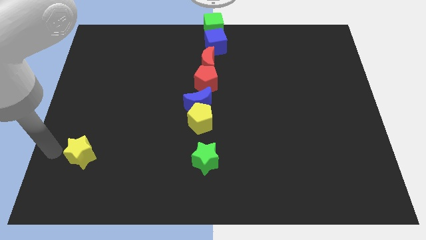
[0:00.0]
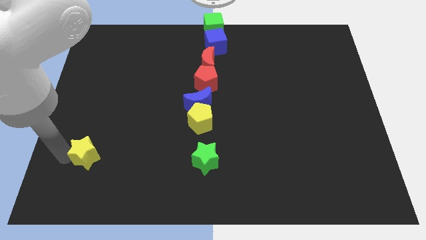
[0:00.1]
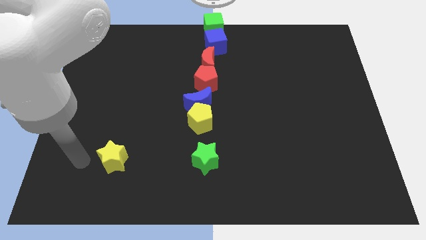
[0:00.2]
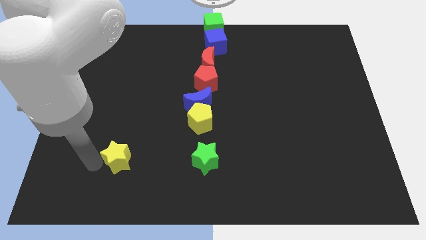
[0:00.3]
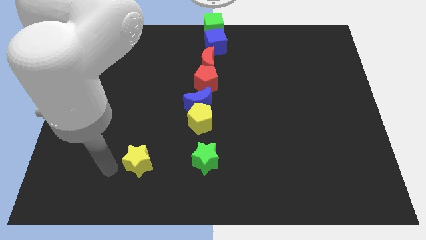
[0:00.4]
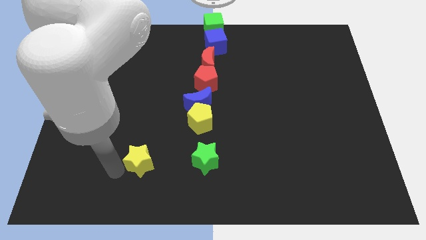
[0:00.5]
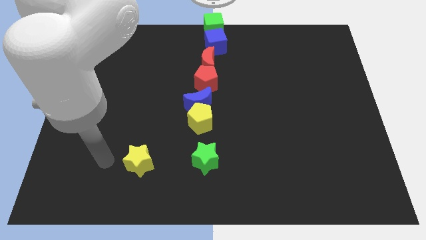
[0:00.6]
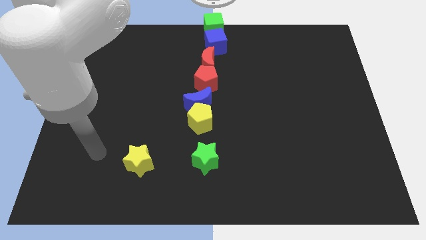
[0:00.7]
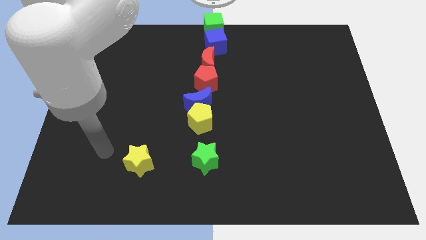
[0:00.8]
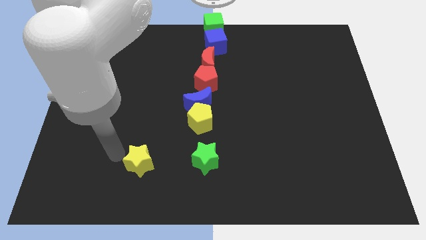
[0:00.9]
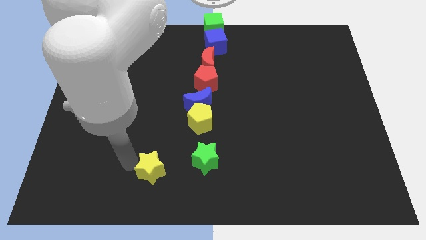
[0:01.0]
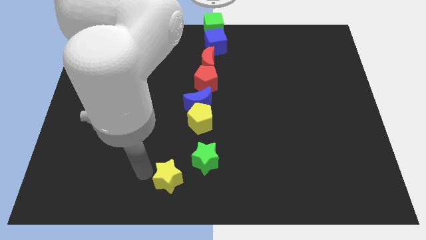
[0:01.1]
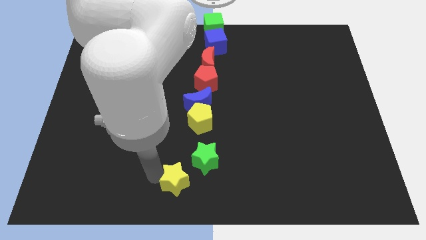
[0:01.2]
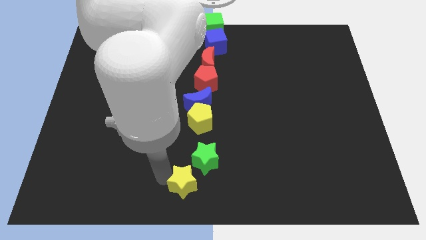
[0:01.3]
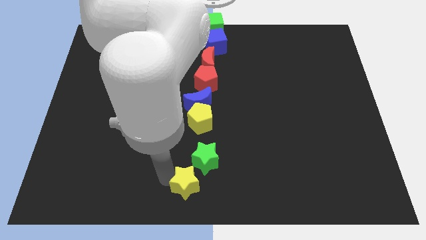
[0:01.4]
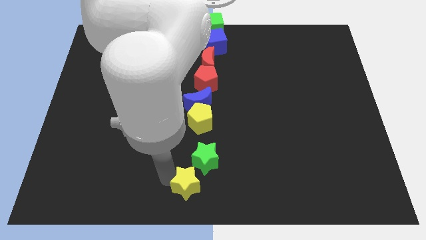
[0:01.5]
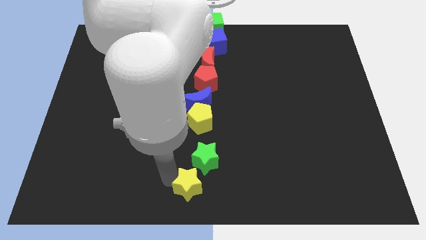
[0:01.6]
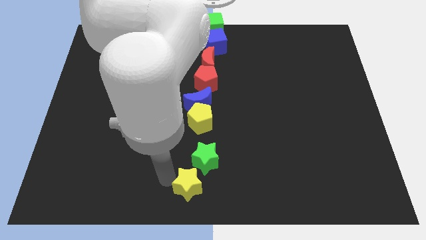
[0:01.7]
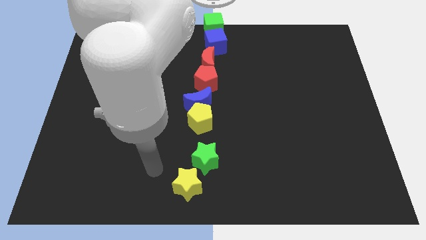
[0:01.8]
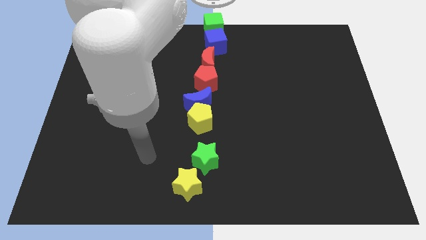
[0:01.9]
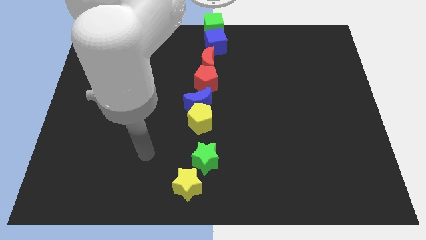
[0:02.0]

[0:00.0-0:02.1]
place the yellow star at the bottom of the green star

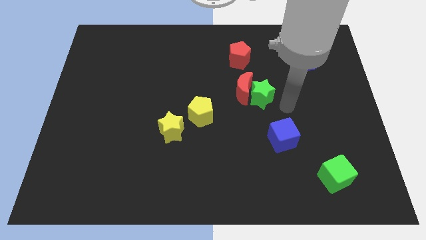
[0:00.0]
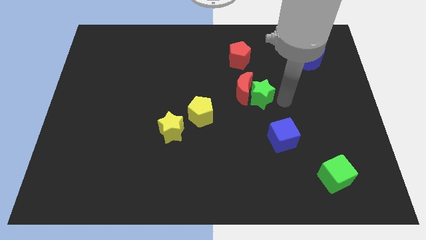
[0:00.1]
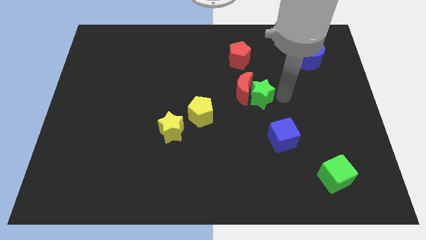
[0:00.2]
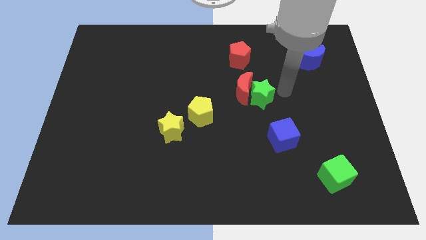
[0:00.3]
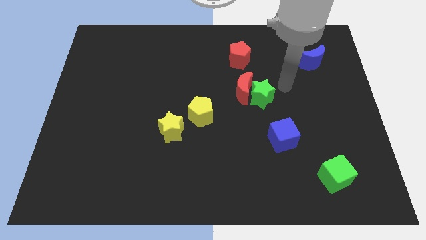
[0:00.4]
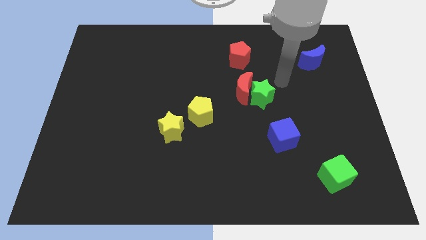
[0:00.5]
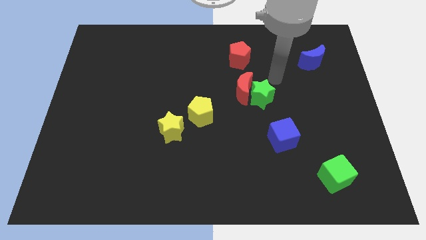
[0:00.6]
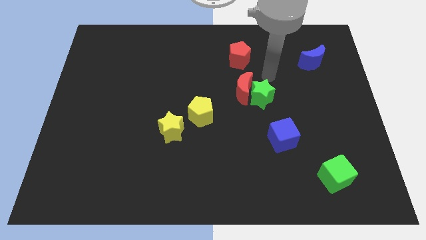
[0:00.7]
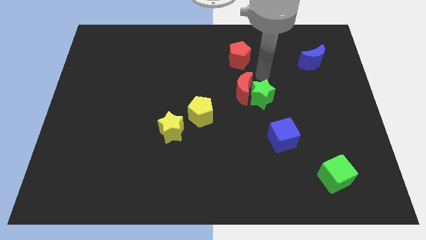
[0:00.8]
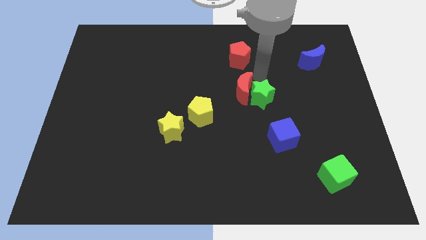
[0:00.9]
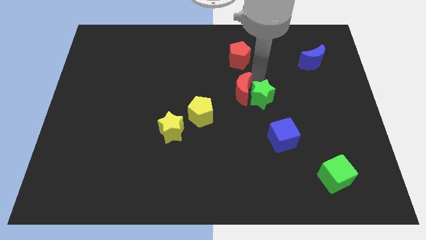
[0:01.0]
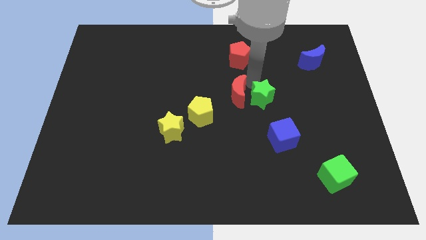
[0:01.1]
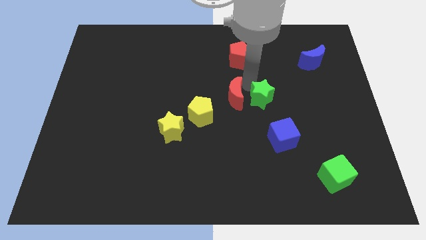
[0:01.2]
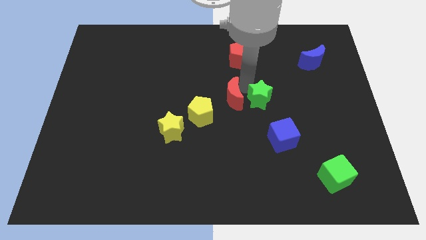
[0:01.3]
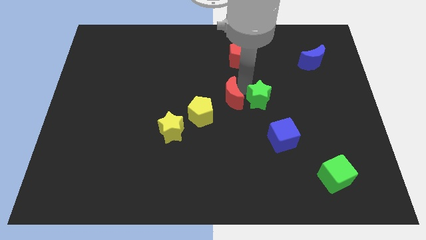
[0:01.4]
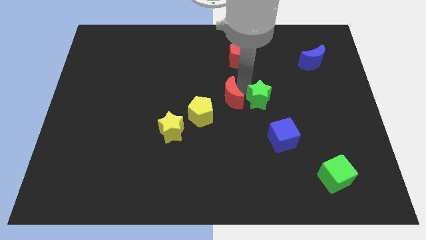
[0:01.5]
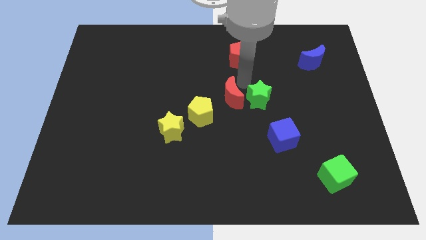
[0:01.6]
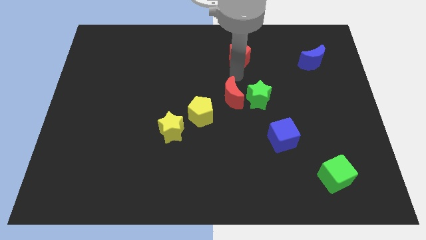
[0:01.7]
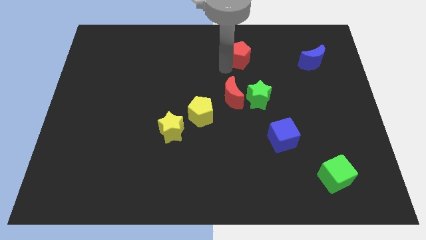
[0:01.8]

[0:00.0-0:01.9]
slightly move the red moon away from green star

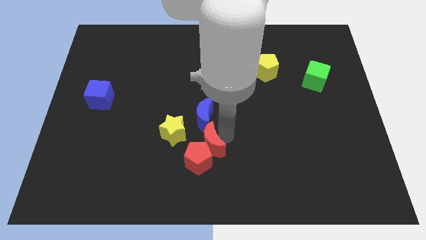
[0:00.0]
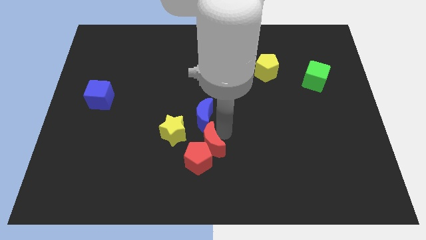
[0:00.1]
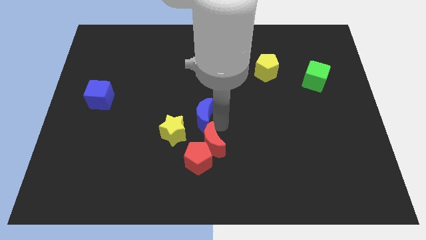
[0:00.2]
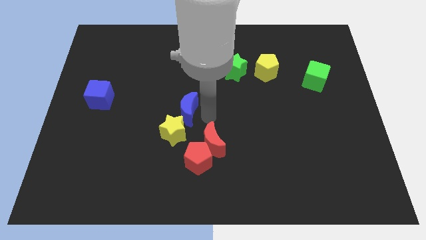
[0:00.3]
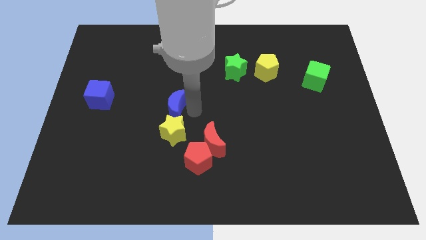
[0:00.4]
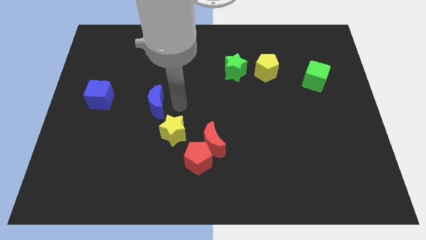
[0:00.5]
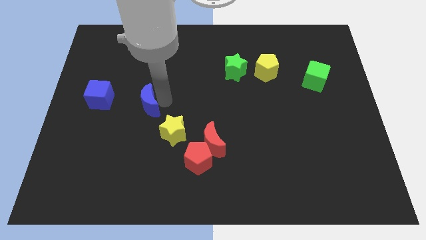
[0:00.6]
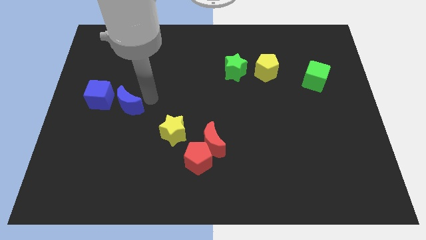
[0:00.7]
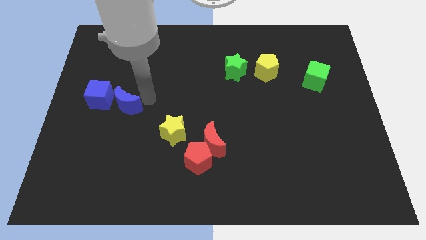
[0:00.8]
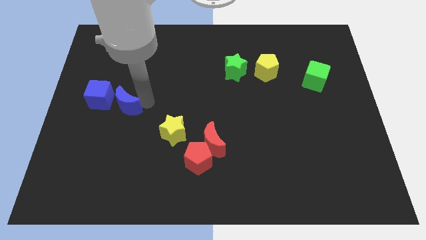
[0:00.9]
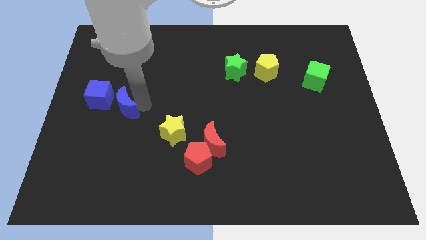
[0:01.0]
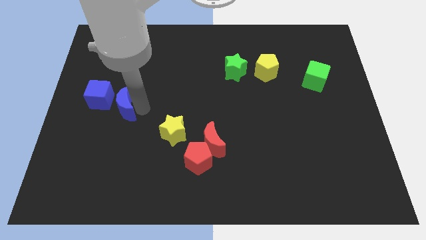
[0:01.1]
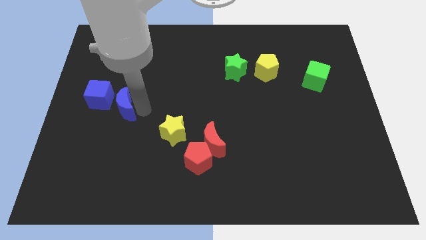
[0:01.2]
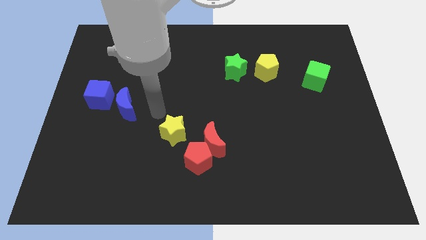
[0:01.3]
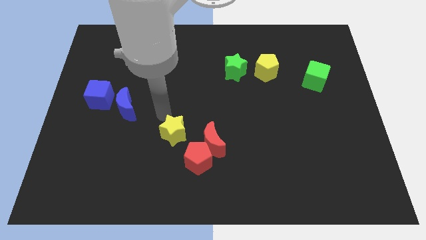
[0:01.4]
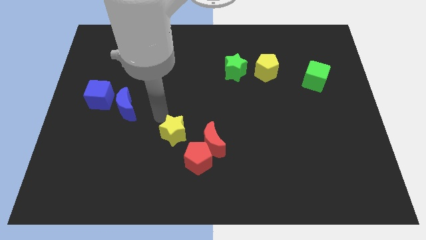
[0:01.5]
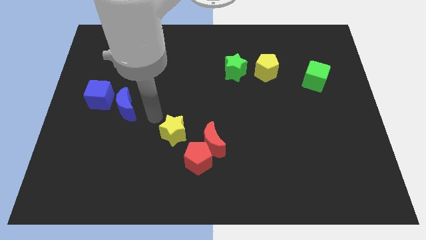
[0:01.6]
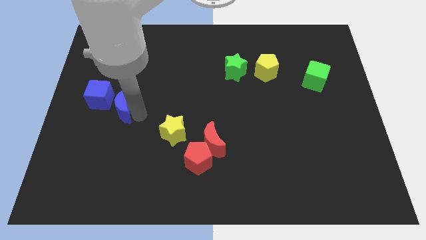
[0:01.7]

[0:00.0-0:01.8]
move the blue crescent beside the blue cube

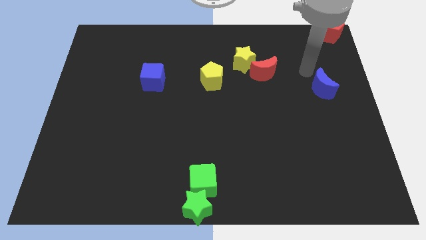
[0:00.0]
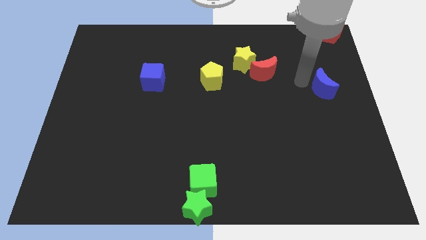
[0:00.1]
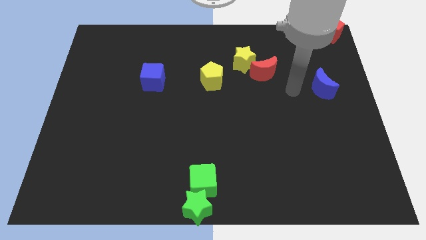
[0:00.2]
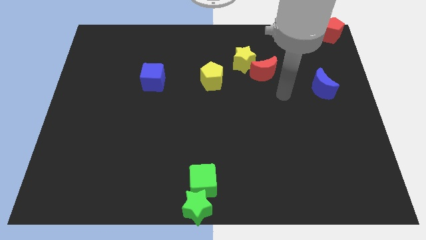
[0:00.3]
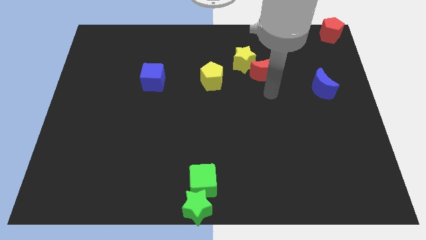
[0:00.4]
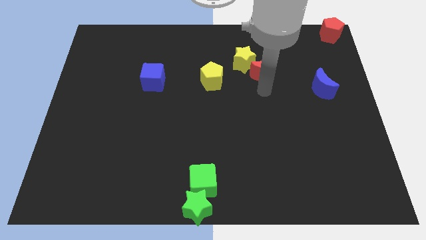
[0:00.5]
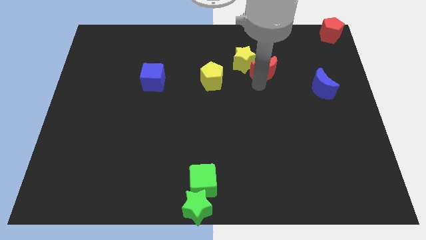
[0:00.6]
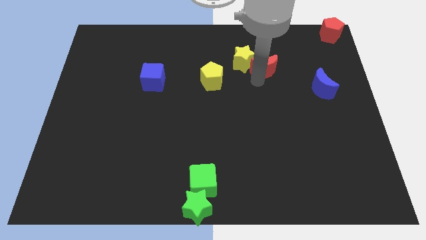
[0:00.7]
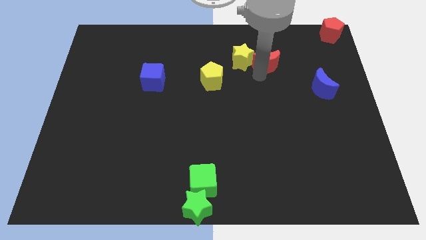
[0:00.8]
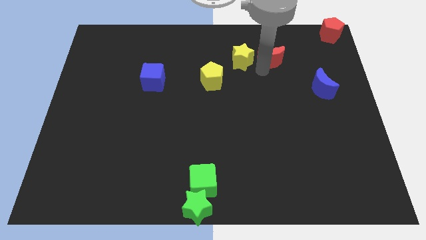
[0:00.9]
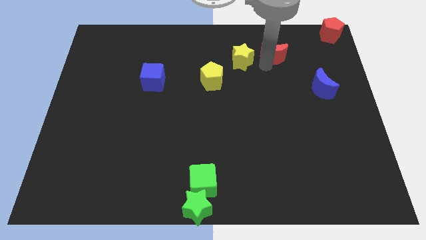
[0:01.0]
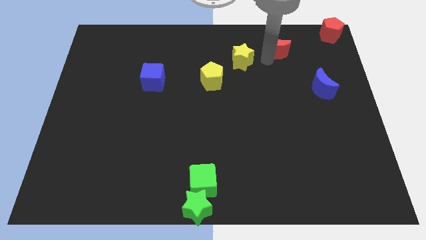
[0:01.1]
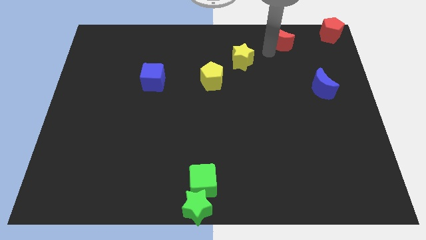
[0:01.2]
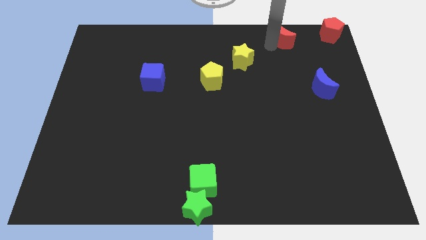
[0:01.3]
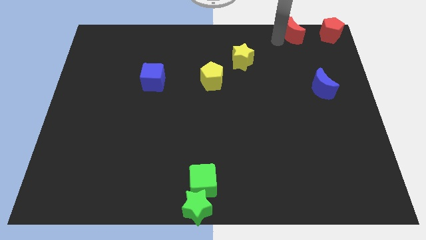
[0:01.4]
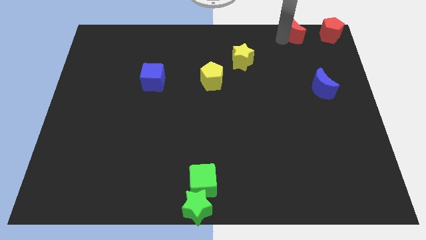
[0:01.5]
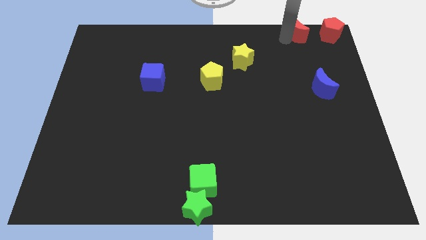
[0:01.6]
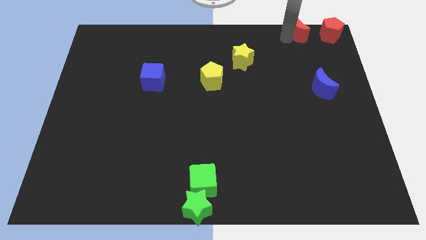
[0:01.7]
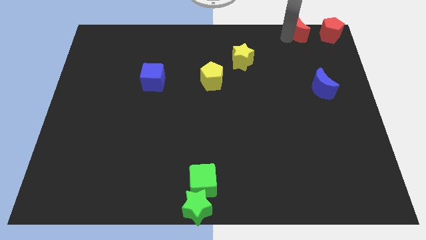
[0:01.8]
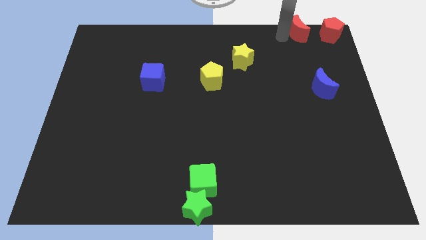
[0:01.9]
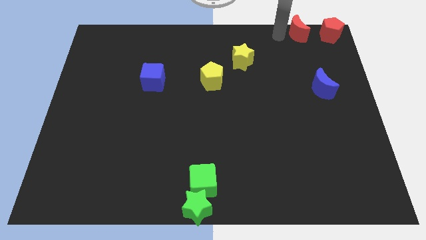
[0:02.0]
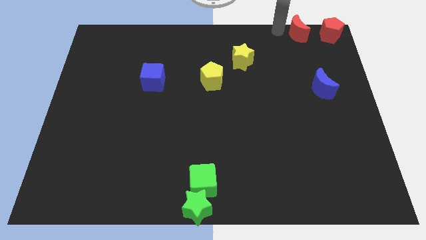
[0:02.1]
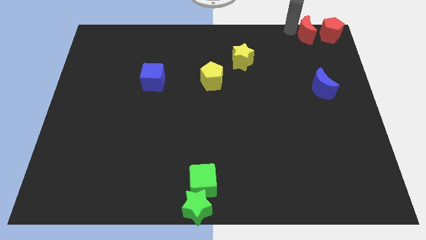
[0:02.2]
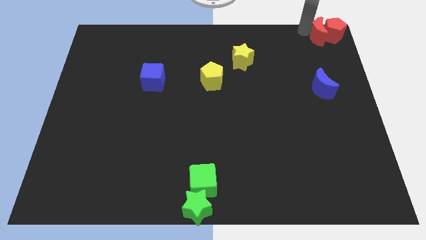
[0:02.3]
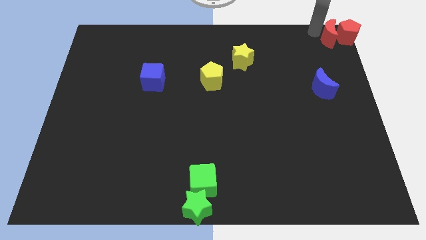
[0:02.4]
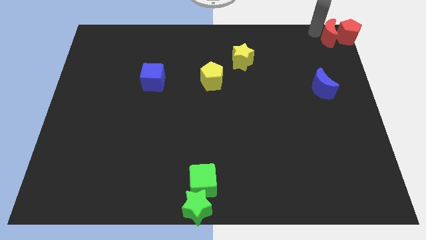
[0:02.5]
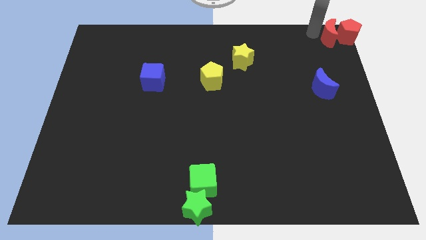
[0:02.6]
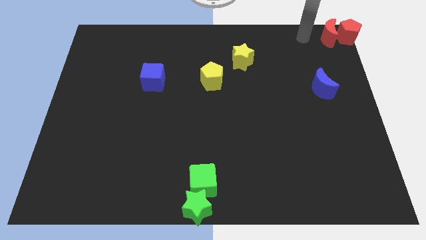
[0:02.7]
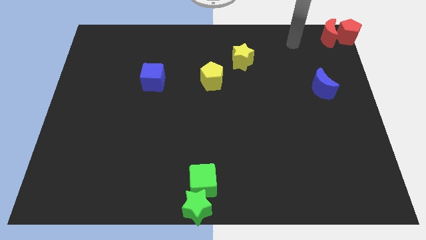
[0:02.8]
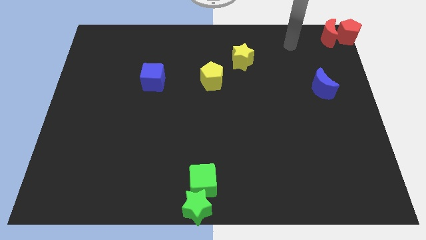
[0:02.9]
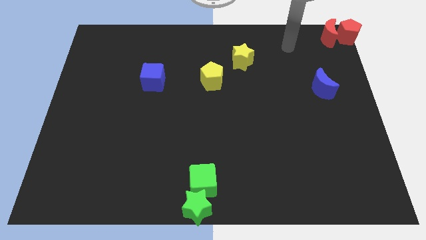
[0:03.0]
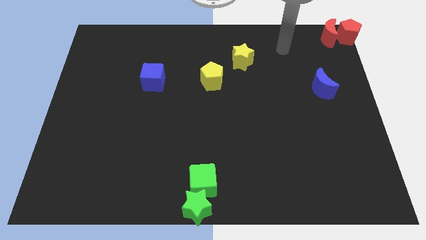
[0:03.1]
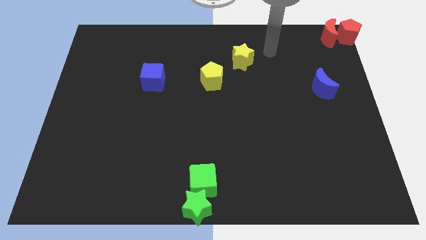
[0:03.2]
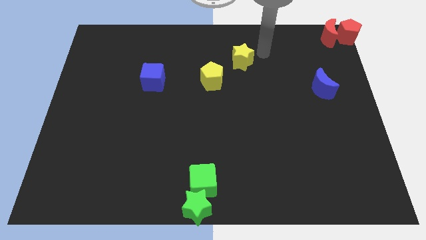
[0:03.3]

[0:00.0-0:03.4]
slide the red moon into the red pentagon
